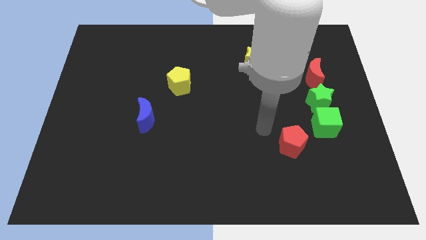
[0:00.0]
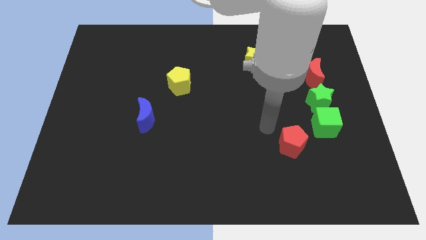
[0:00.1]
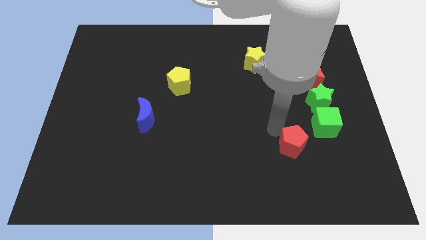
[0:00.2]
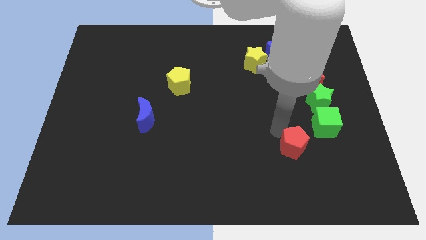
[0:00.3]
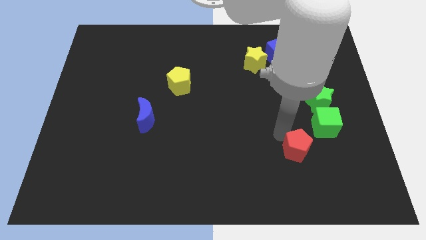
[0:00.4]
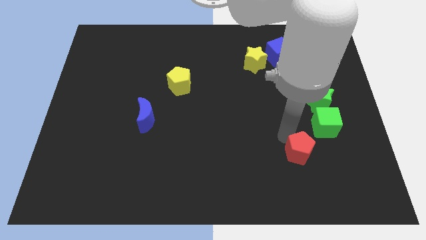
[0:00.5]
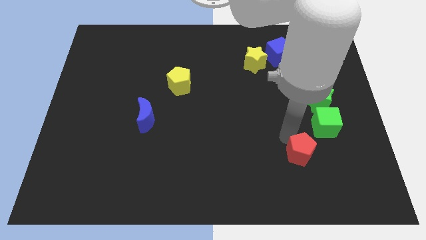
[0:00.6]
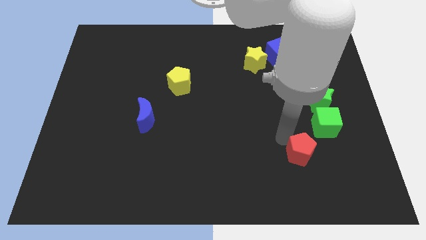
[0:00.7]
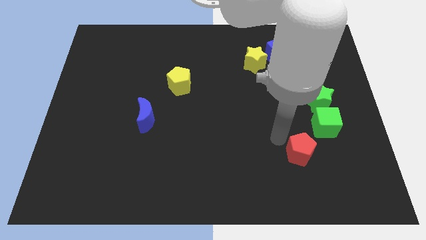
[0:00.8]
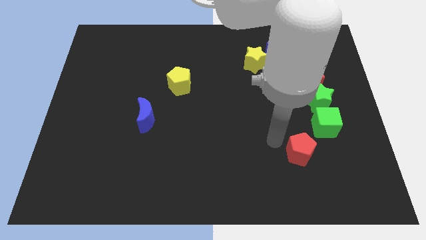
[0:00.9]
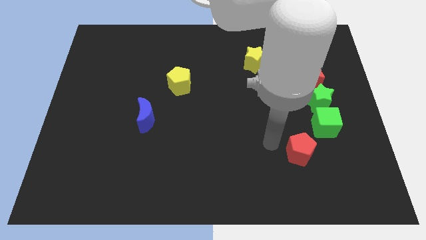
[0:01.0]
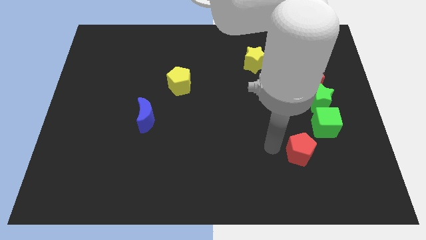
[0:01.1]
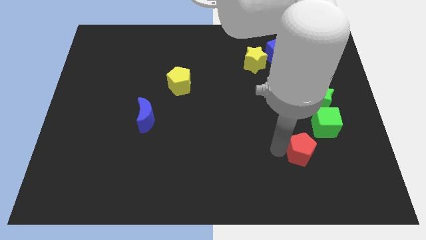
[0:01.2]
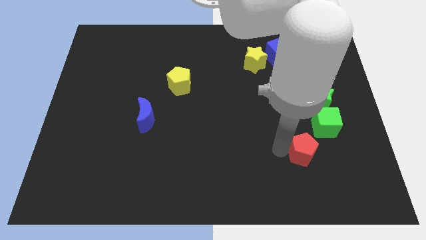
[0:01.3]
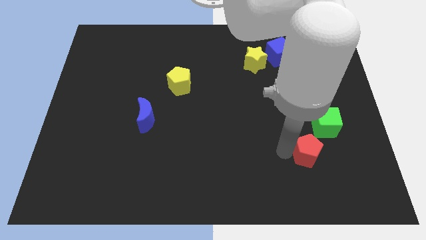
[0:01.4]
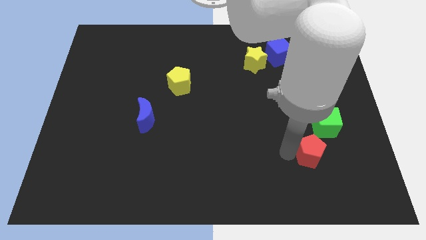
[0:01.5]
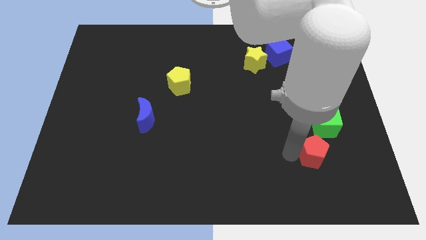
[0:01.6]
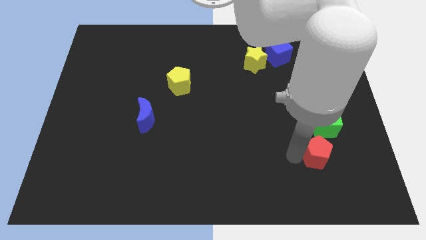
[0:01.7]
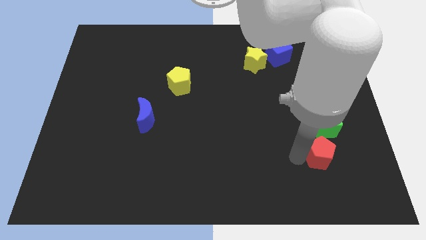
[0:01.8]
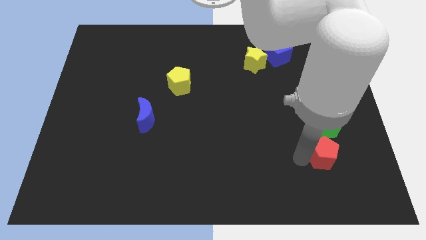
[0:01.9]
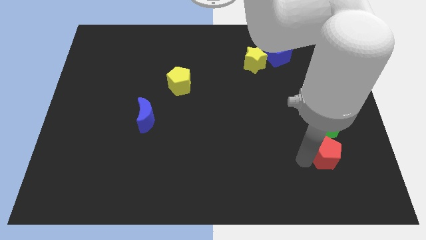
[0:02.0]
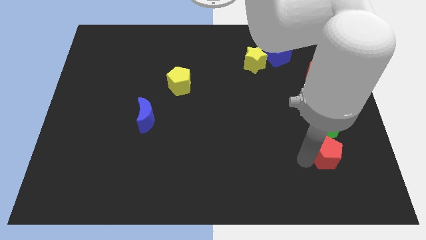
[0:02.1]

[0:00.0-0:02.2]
move the red pentagon to the bottom of the green cube

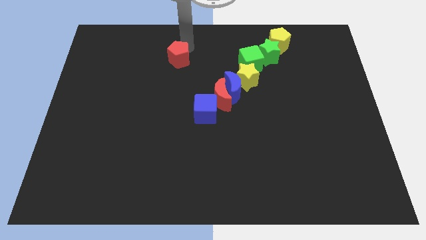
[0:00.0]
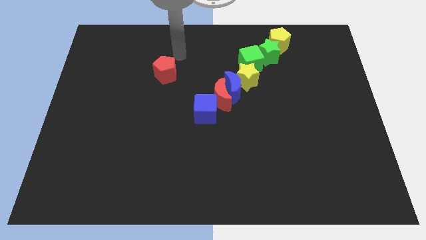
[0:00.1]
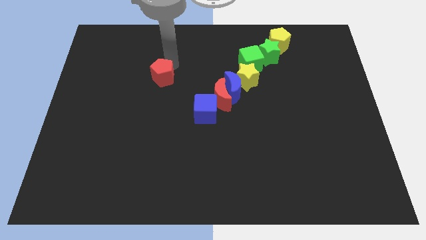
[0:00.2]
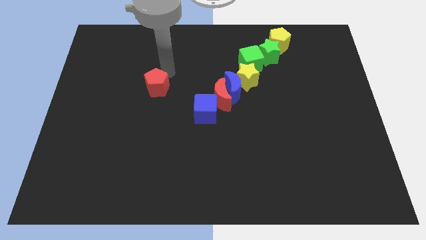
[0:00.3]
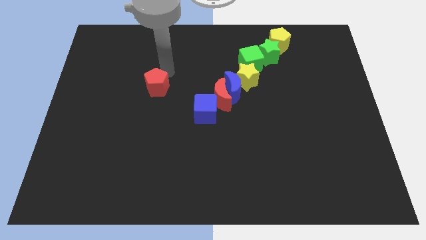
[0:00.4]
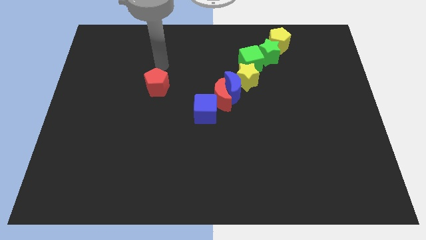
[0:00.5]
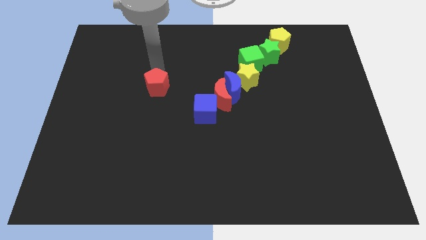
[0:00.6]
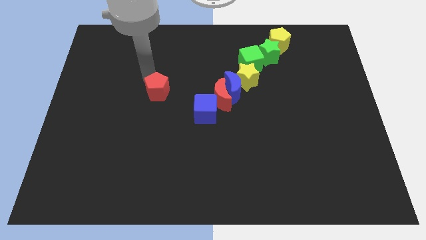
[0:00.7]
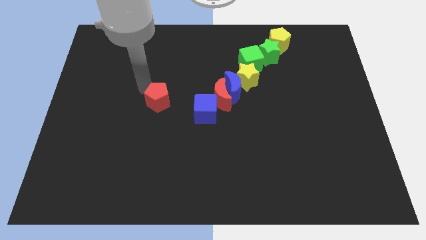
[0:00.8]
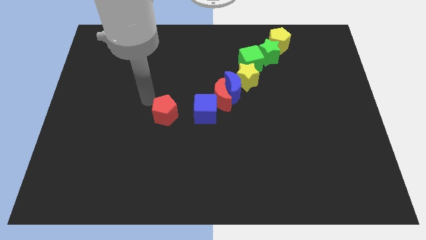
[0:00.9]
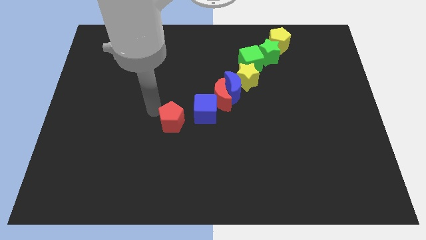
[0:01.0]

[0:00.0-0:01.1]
slide red pentagon down to left of blue cube

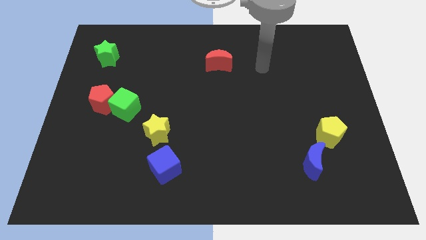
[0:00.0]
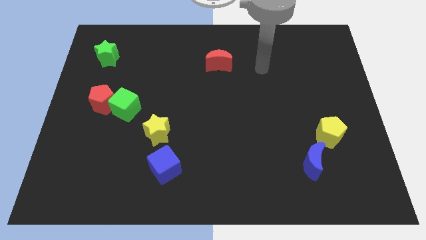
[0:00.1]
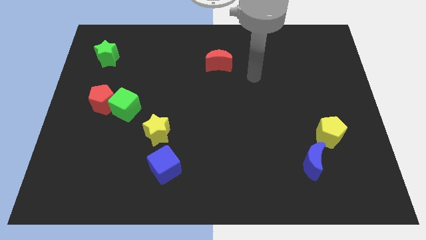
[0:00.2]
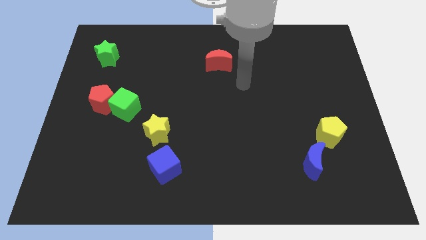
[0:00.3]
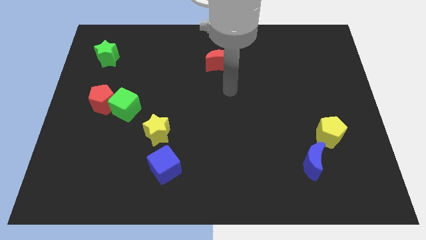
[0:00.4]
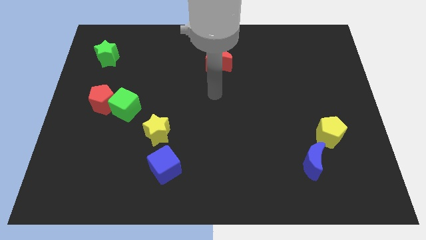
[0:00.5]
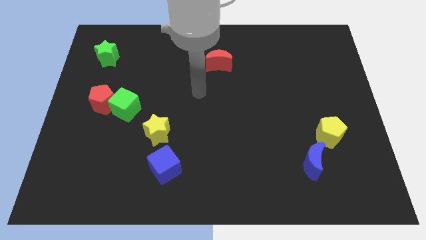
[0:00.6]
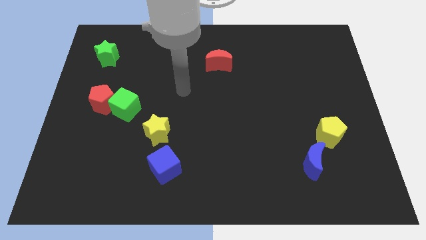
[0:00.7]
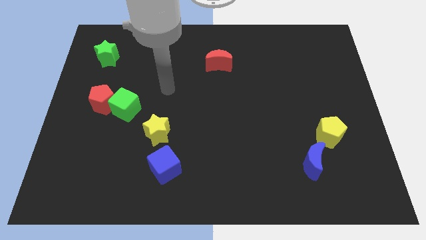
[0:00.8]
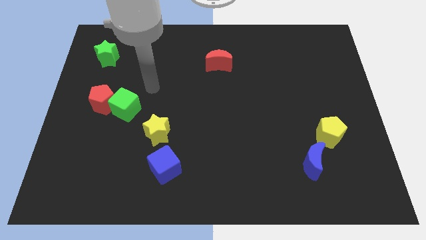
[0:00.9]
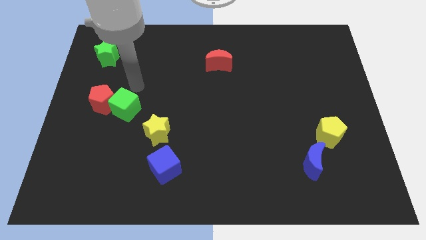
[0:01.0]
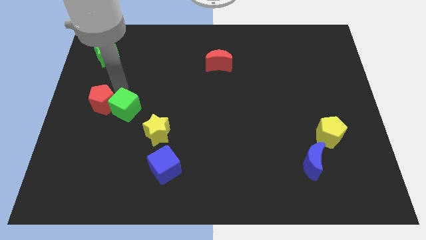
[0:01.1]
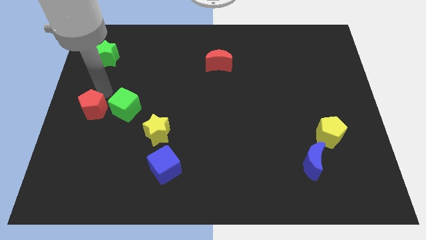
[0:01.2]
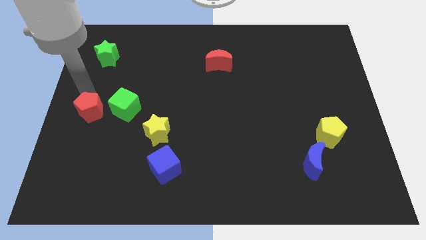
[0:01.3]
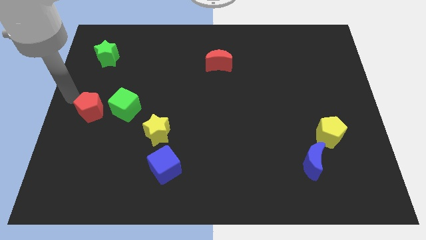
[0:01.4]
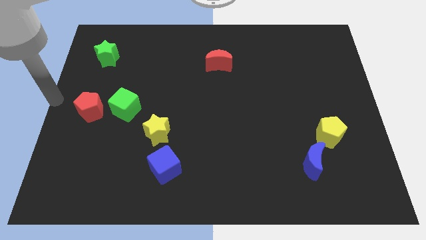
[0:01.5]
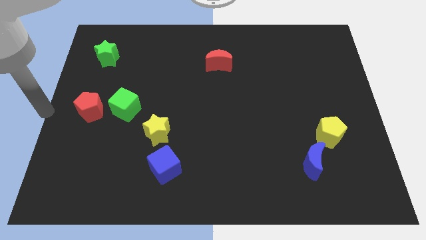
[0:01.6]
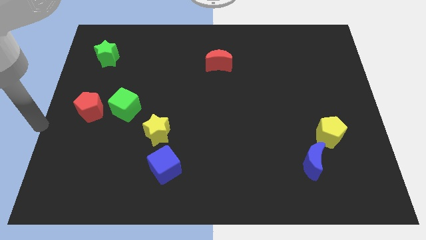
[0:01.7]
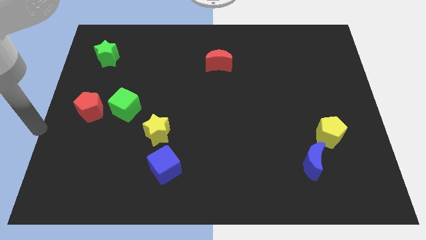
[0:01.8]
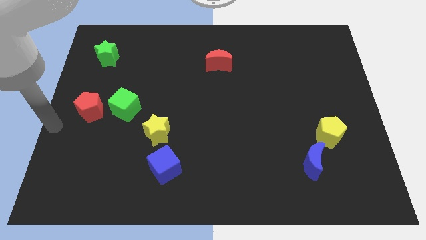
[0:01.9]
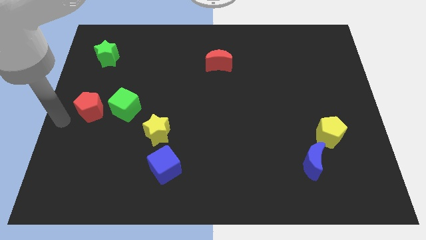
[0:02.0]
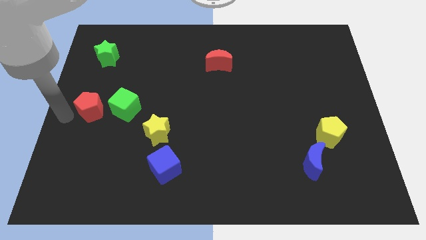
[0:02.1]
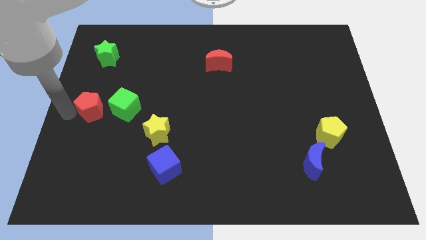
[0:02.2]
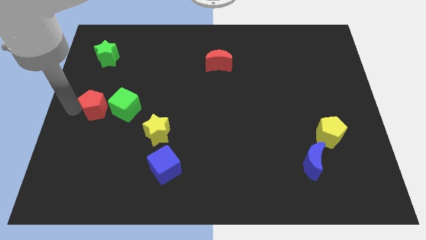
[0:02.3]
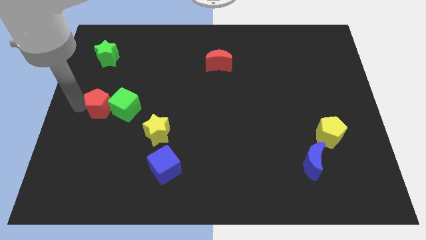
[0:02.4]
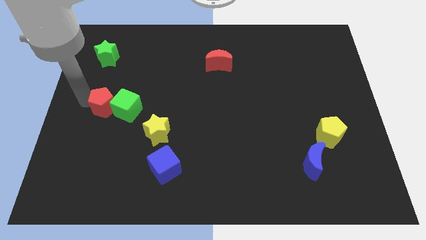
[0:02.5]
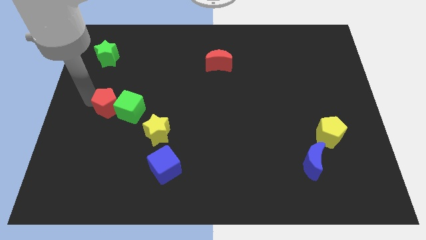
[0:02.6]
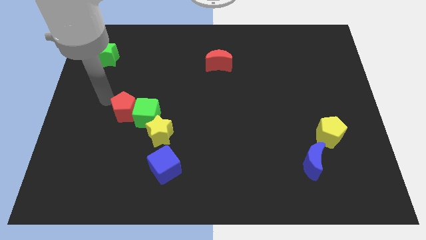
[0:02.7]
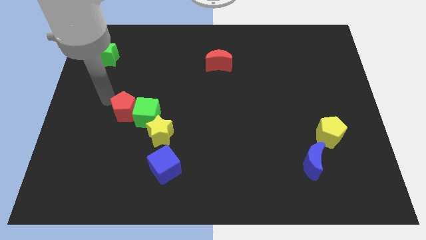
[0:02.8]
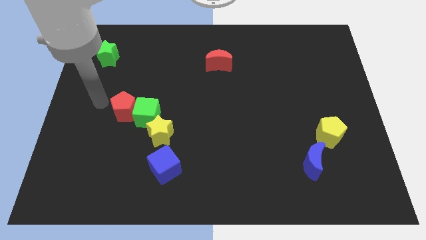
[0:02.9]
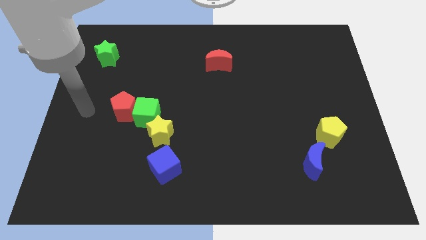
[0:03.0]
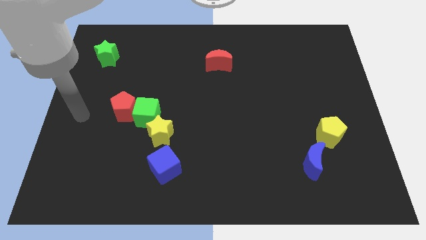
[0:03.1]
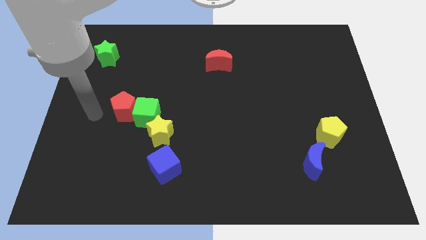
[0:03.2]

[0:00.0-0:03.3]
push the red pentagon into the group of blocks

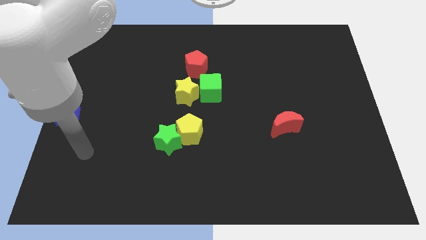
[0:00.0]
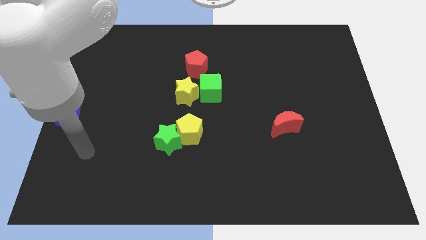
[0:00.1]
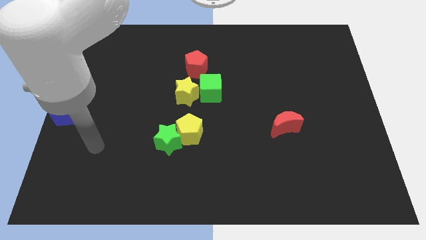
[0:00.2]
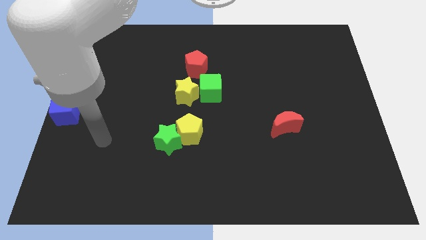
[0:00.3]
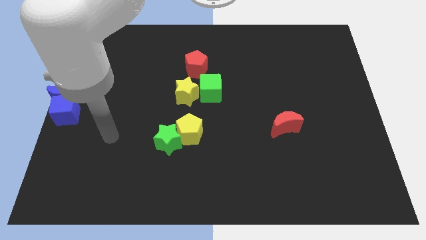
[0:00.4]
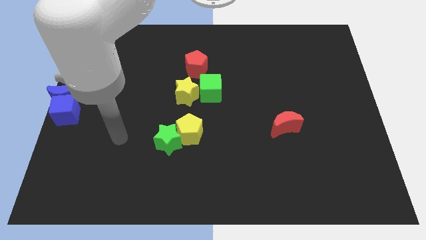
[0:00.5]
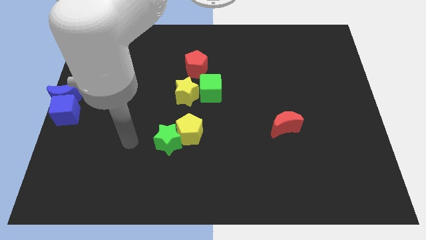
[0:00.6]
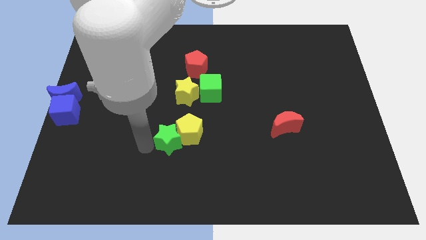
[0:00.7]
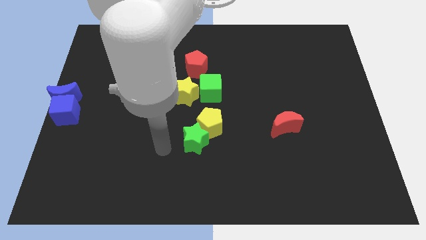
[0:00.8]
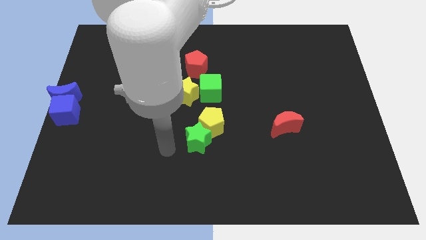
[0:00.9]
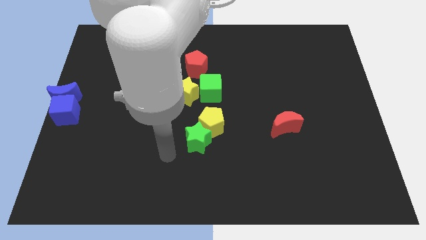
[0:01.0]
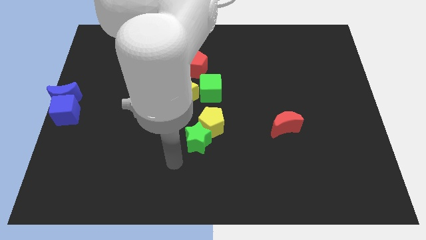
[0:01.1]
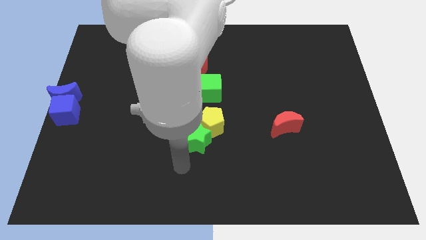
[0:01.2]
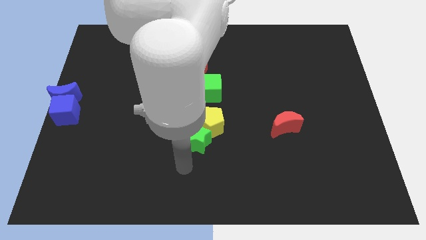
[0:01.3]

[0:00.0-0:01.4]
push the yellow pentagon and green star below the green cube

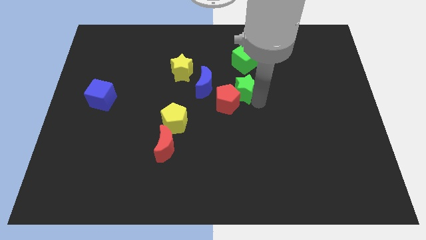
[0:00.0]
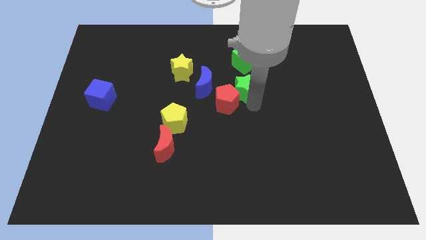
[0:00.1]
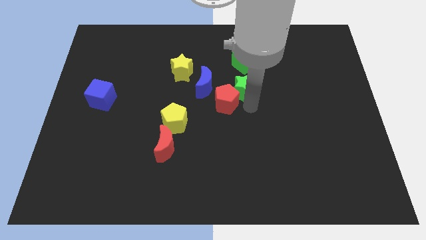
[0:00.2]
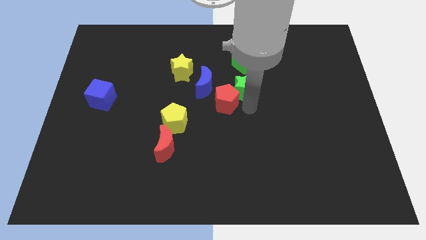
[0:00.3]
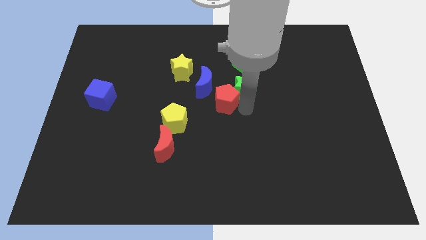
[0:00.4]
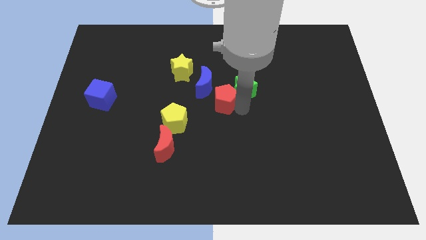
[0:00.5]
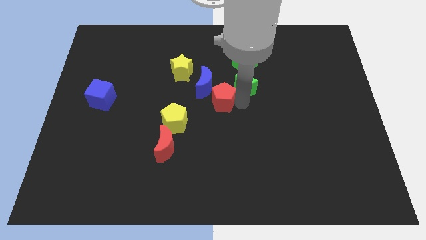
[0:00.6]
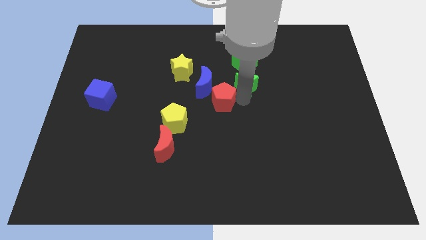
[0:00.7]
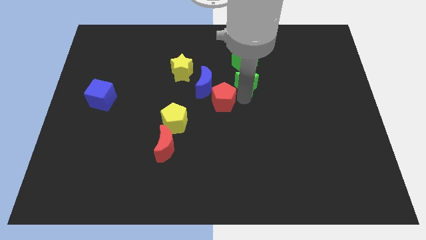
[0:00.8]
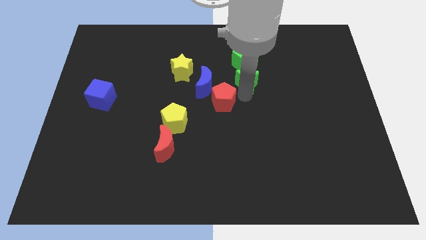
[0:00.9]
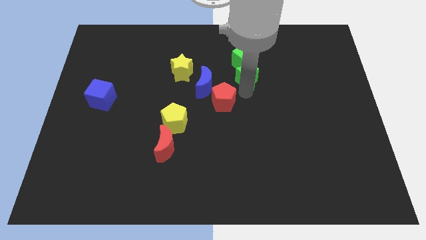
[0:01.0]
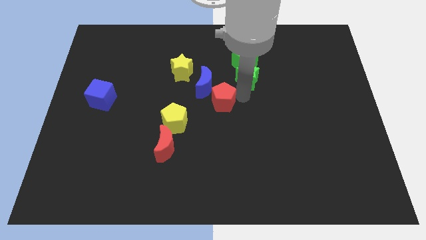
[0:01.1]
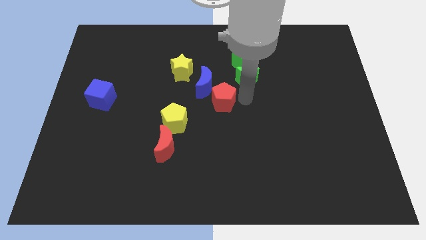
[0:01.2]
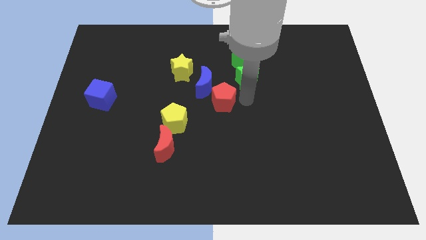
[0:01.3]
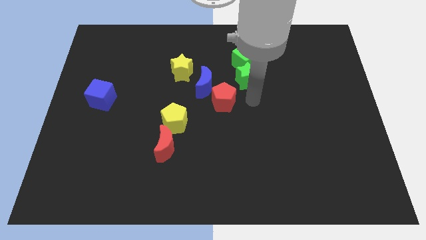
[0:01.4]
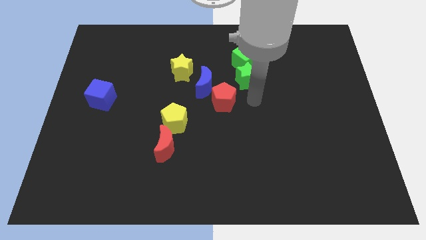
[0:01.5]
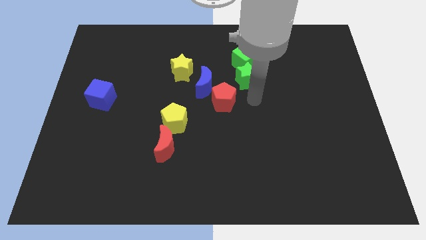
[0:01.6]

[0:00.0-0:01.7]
push the green star into the green cube
